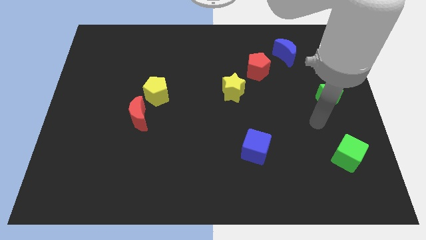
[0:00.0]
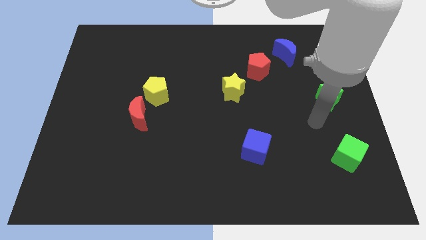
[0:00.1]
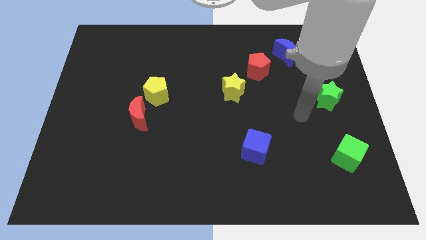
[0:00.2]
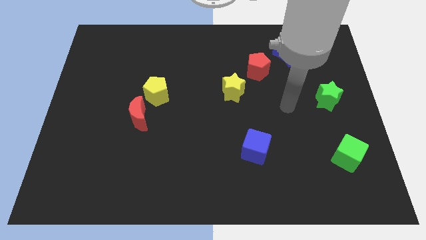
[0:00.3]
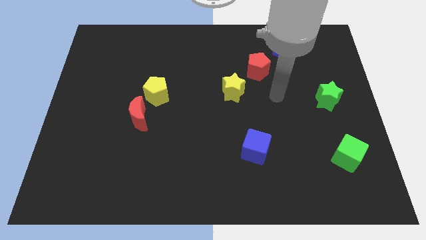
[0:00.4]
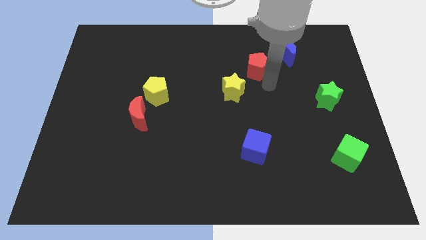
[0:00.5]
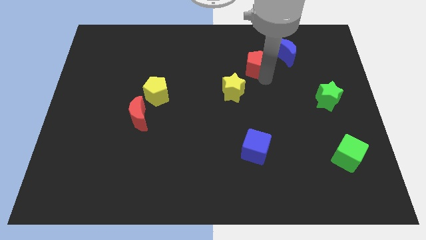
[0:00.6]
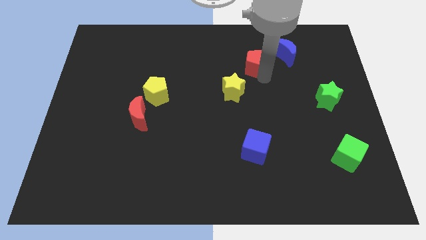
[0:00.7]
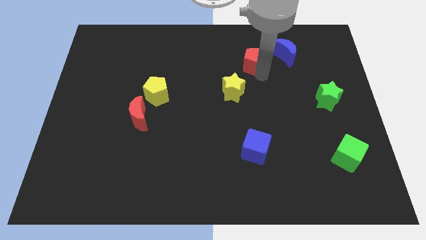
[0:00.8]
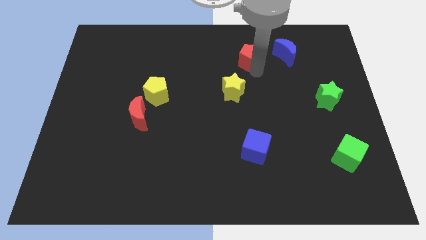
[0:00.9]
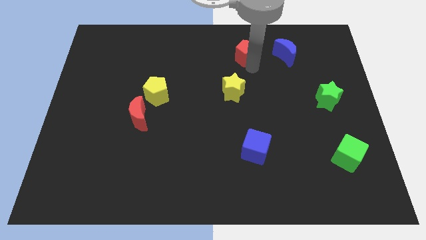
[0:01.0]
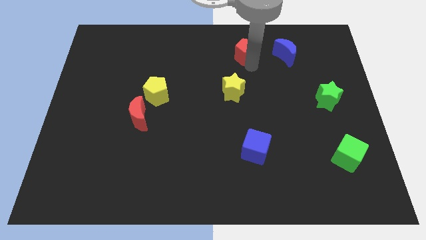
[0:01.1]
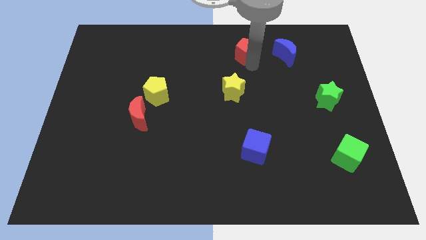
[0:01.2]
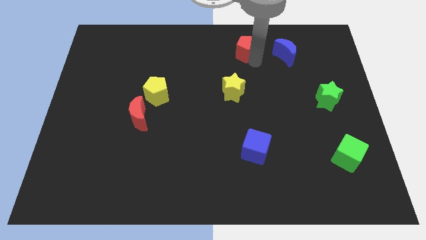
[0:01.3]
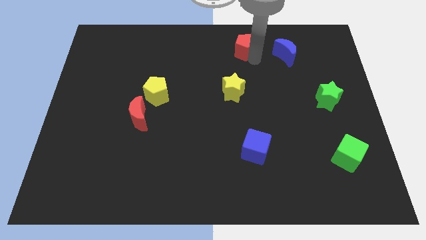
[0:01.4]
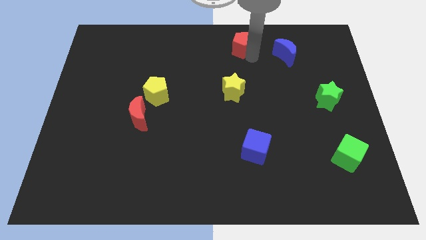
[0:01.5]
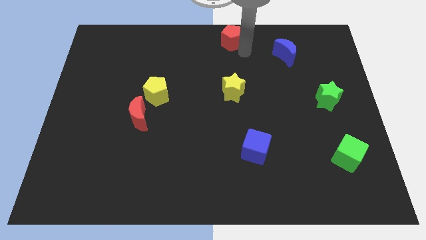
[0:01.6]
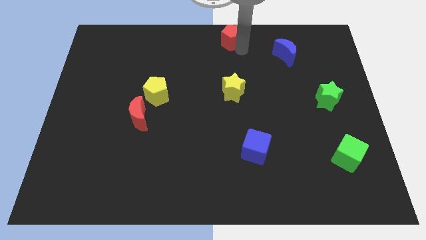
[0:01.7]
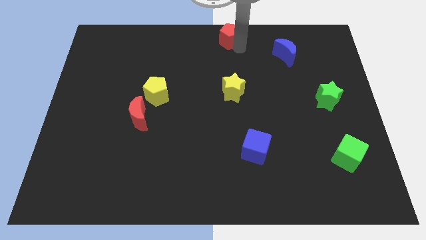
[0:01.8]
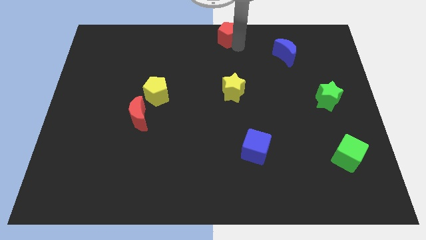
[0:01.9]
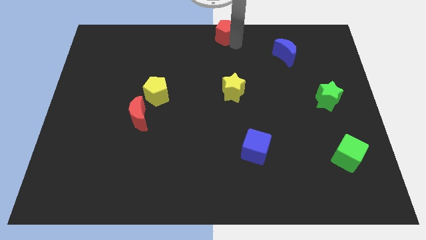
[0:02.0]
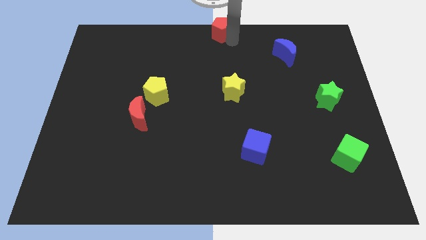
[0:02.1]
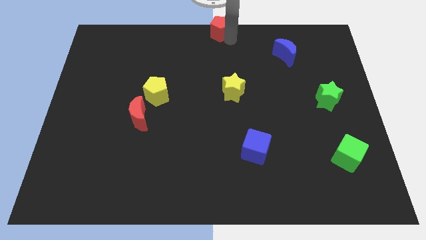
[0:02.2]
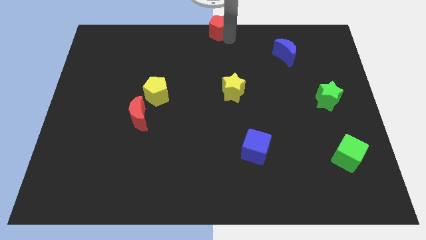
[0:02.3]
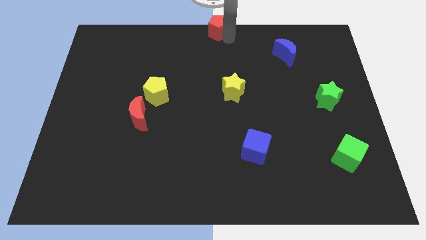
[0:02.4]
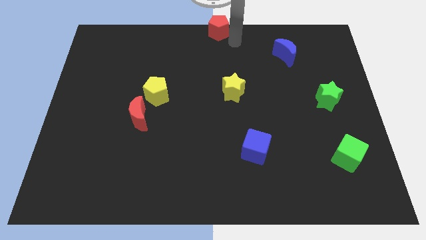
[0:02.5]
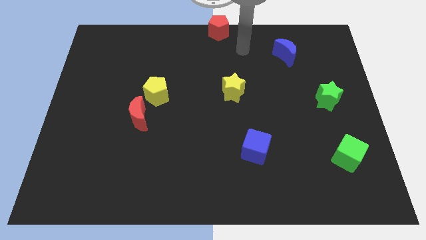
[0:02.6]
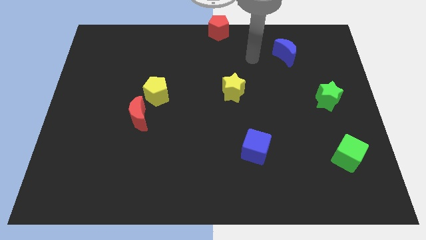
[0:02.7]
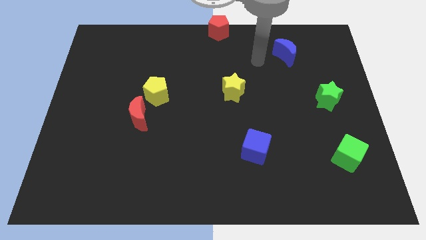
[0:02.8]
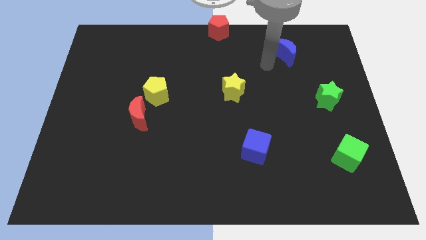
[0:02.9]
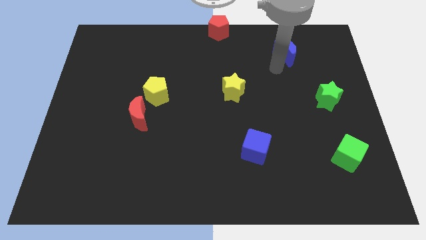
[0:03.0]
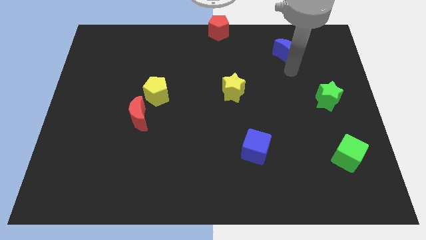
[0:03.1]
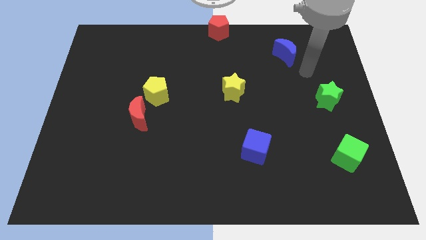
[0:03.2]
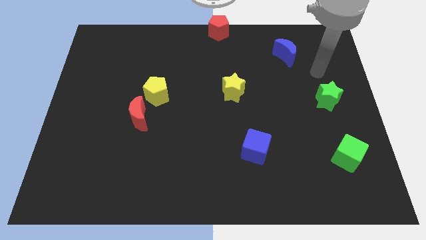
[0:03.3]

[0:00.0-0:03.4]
place red pentagon to the top center

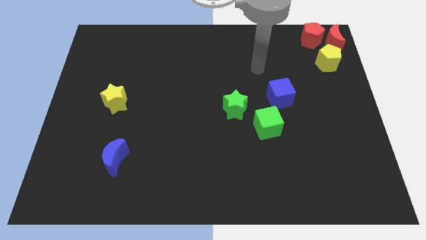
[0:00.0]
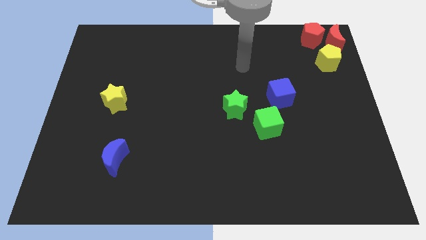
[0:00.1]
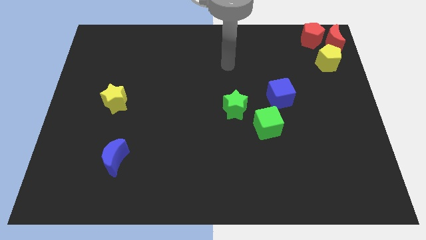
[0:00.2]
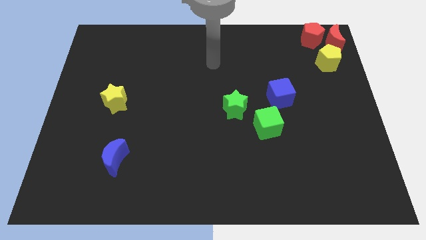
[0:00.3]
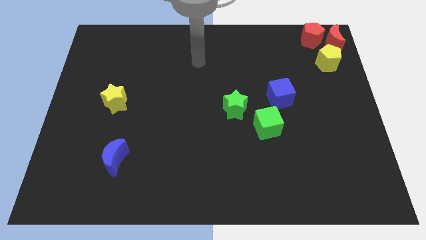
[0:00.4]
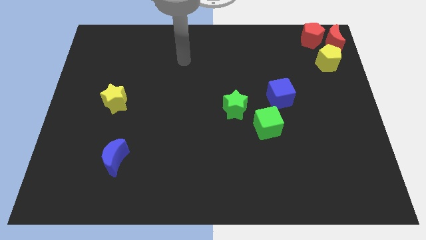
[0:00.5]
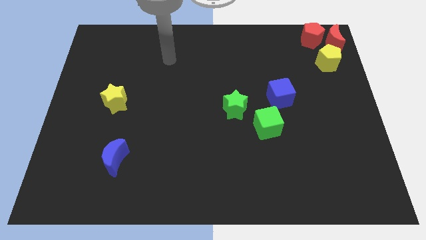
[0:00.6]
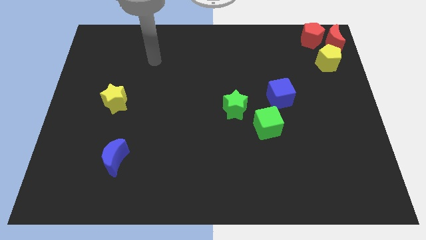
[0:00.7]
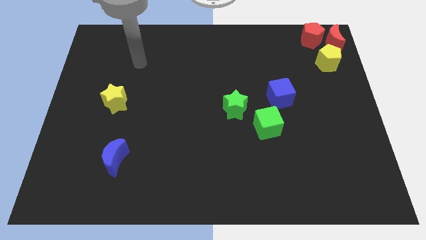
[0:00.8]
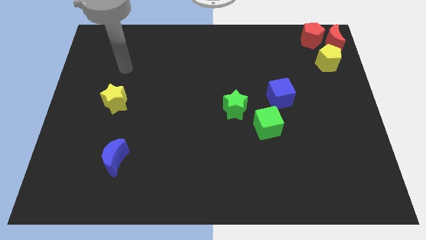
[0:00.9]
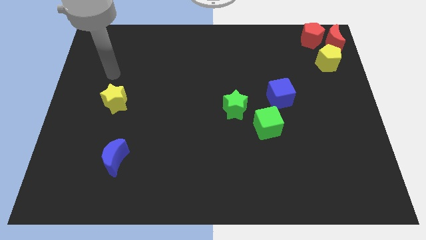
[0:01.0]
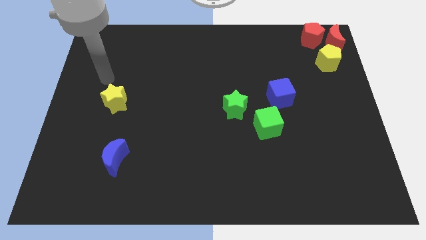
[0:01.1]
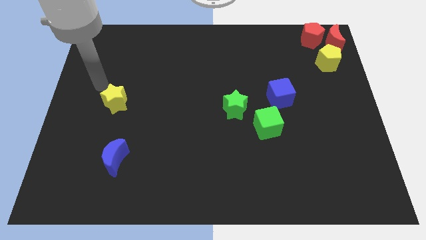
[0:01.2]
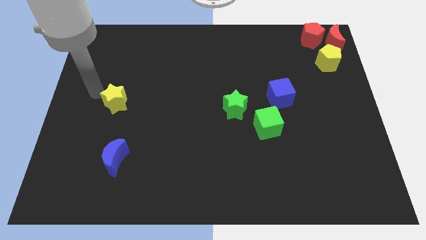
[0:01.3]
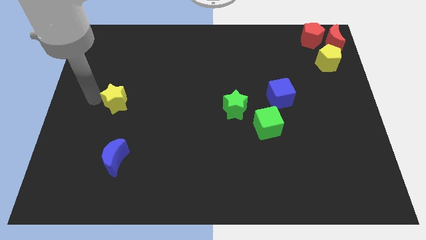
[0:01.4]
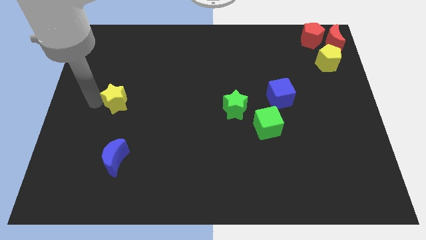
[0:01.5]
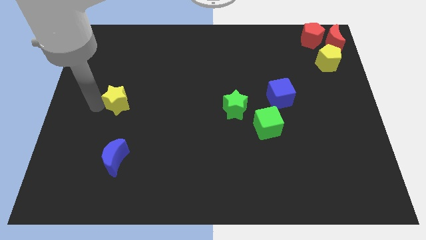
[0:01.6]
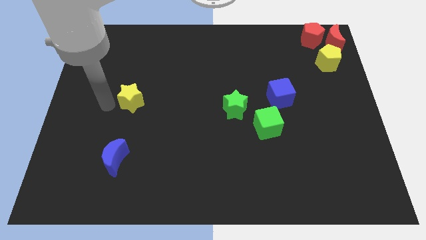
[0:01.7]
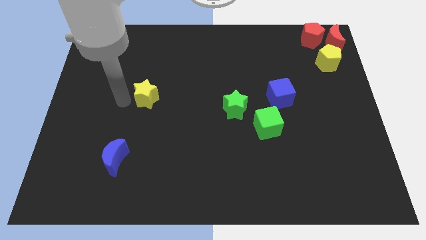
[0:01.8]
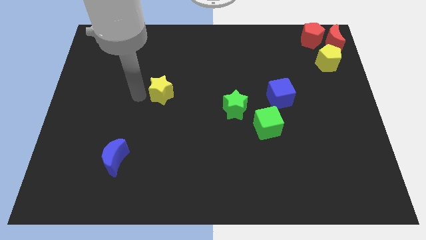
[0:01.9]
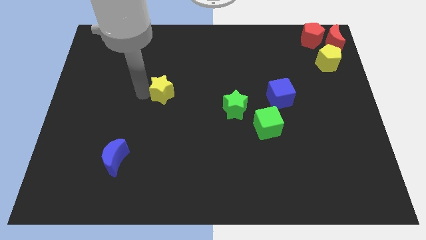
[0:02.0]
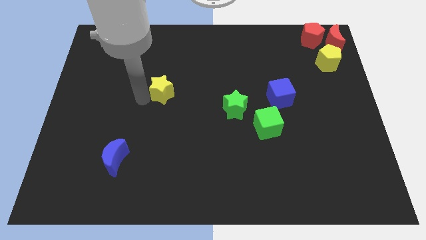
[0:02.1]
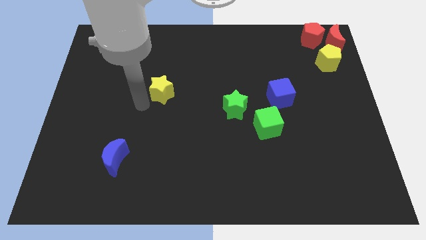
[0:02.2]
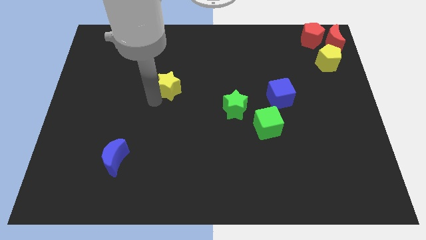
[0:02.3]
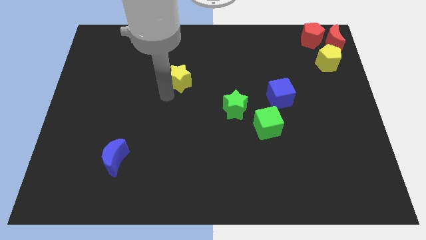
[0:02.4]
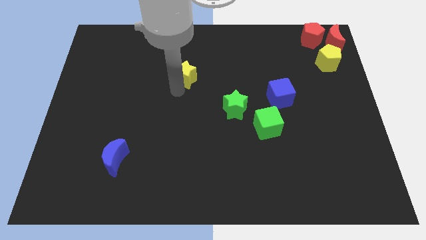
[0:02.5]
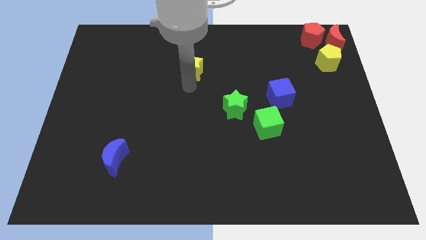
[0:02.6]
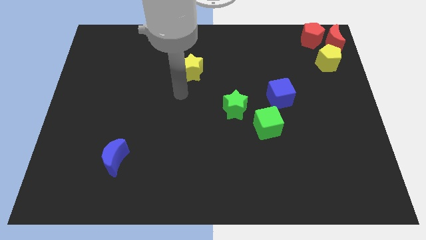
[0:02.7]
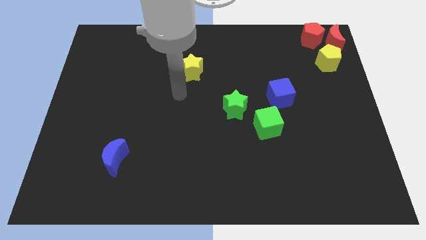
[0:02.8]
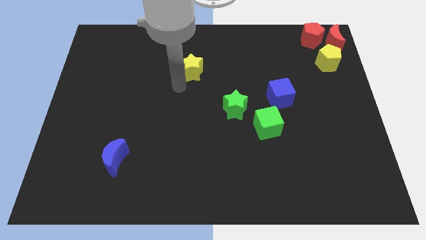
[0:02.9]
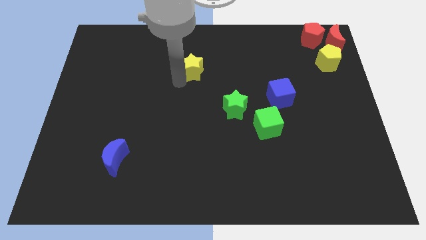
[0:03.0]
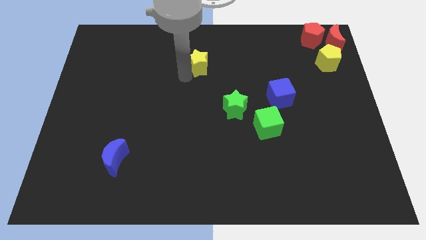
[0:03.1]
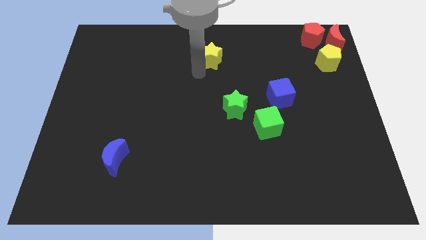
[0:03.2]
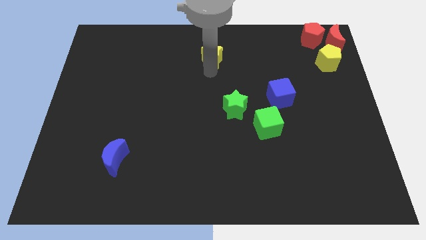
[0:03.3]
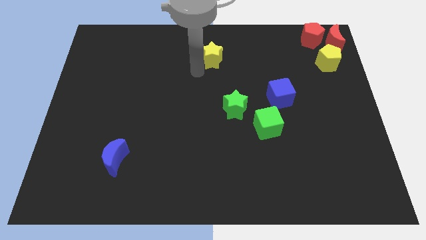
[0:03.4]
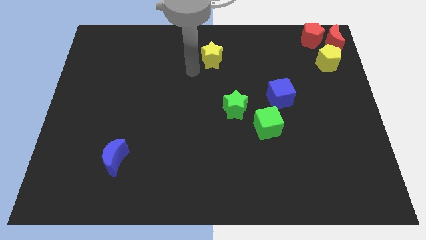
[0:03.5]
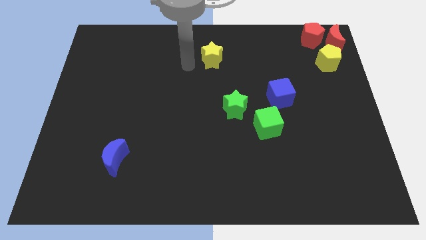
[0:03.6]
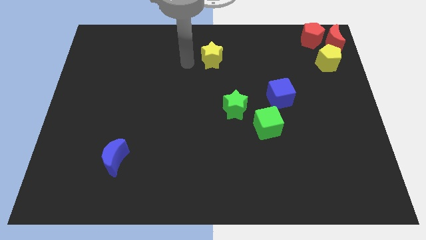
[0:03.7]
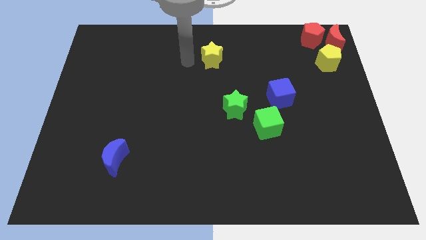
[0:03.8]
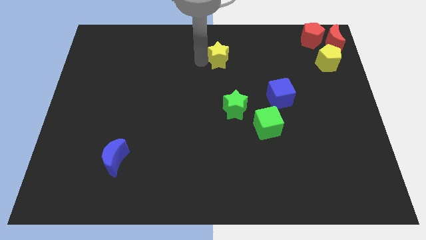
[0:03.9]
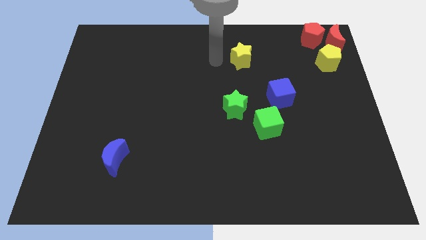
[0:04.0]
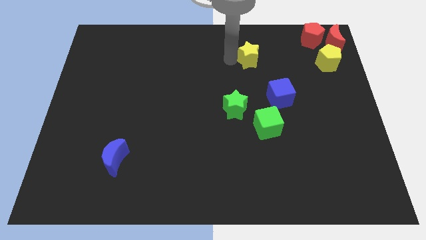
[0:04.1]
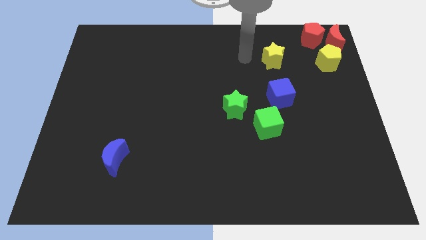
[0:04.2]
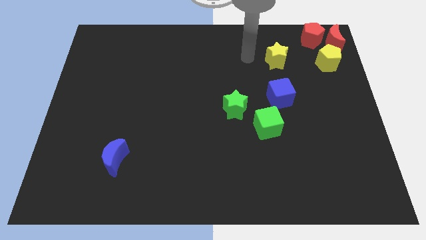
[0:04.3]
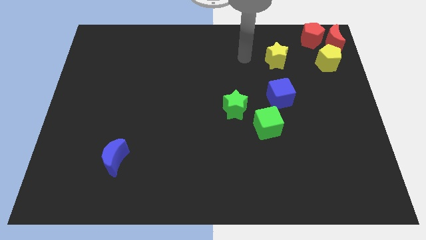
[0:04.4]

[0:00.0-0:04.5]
place the yellow star above the blue cube

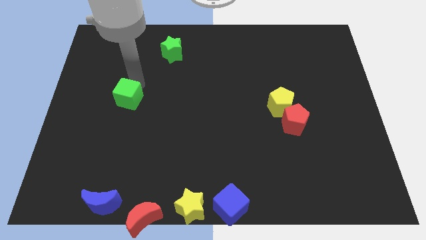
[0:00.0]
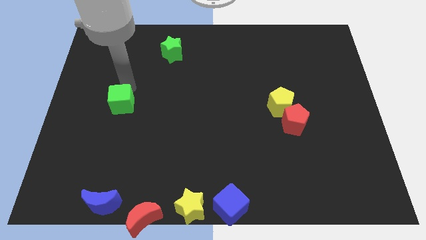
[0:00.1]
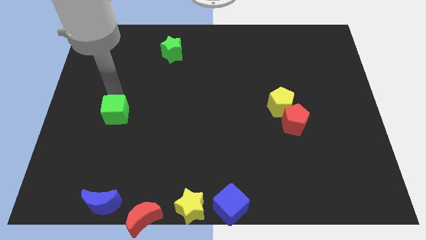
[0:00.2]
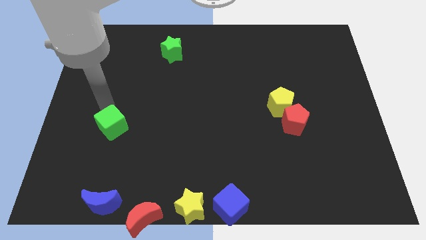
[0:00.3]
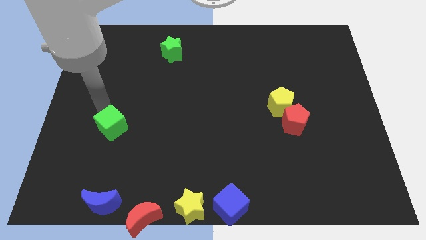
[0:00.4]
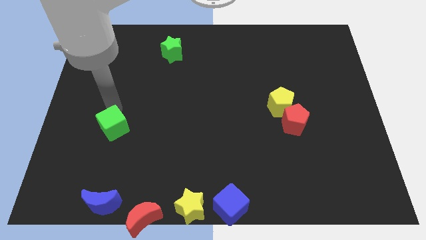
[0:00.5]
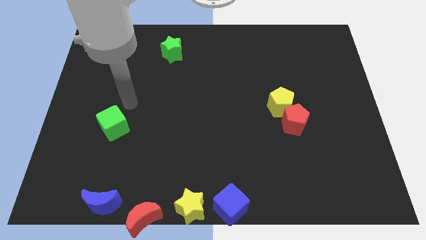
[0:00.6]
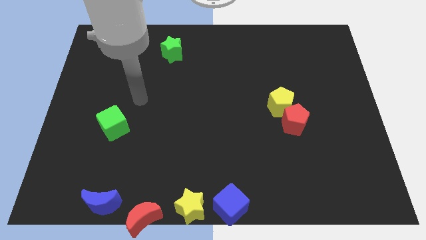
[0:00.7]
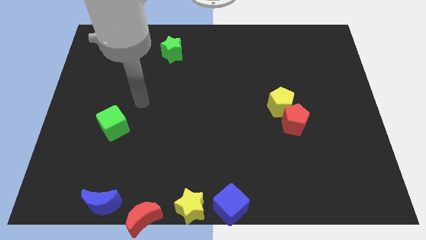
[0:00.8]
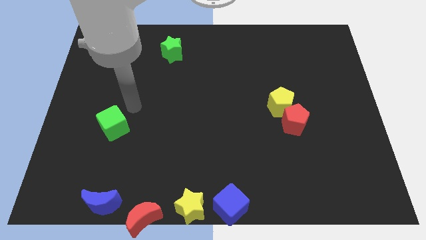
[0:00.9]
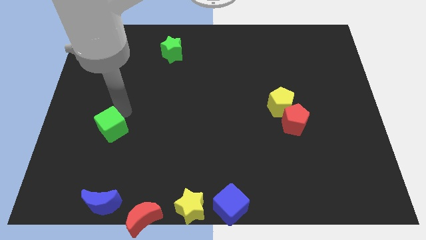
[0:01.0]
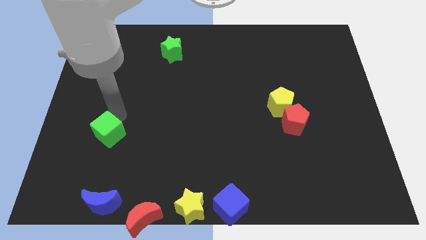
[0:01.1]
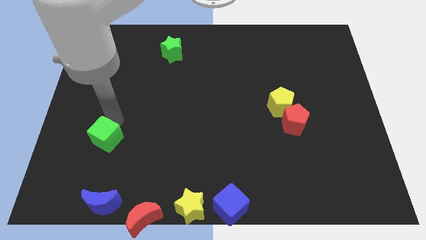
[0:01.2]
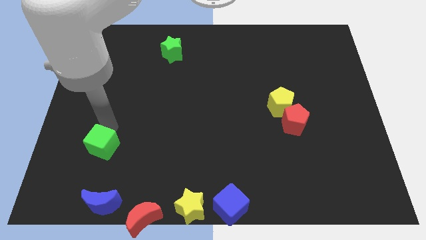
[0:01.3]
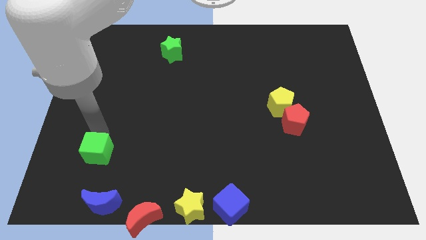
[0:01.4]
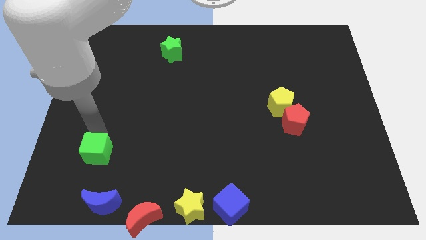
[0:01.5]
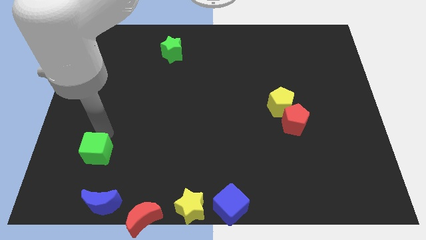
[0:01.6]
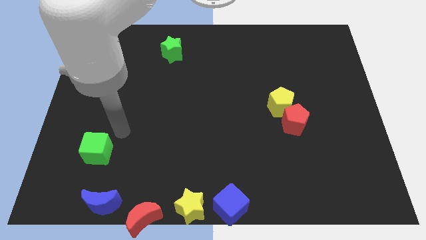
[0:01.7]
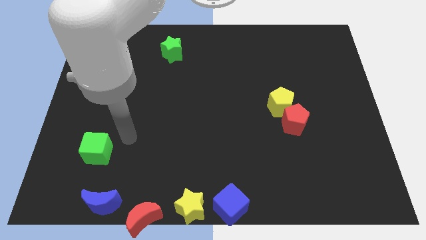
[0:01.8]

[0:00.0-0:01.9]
place the green star above the blue moon
